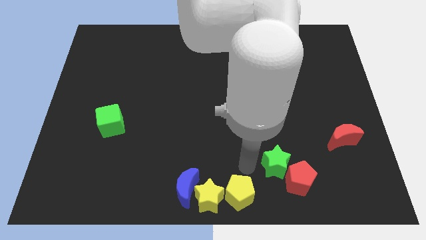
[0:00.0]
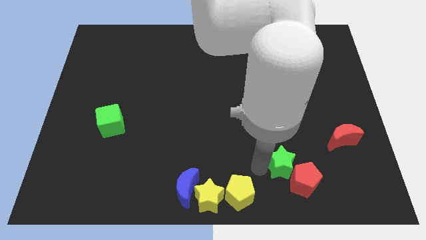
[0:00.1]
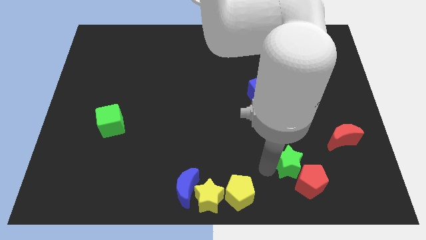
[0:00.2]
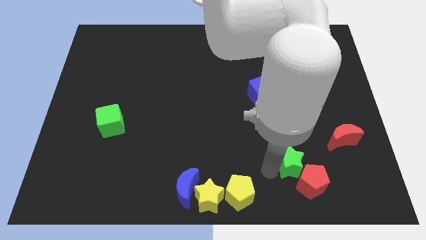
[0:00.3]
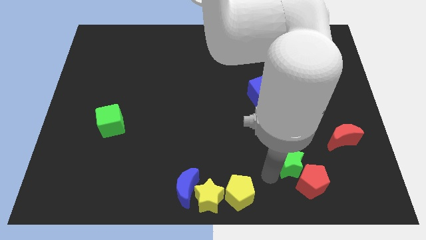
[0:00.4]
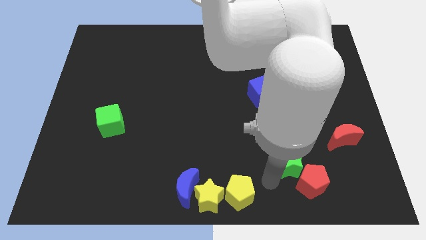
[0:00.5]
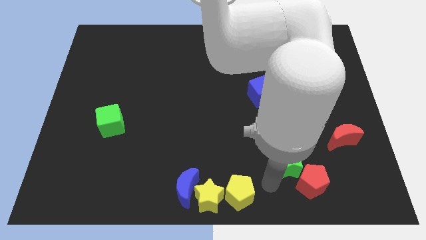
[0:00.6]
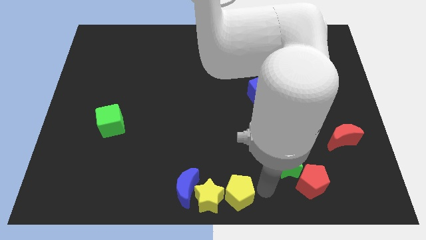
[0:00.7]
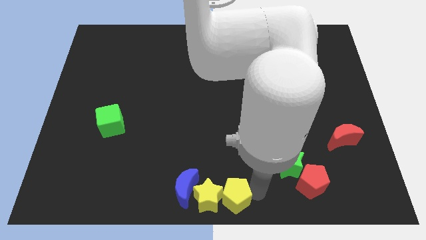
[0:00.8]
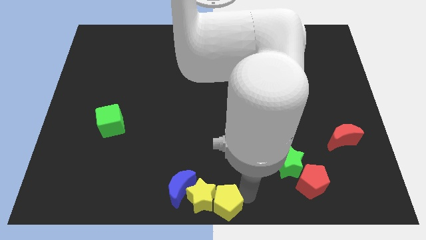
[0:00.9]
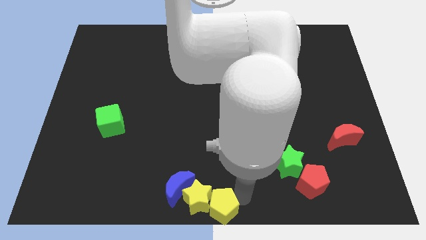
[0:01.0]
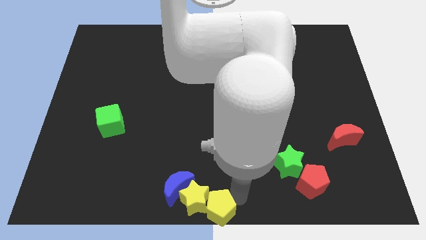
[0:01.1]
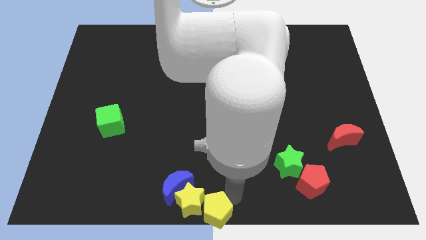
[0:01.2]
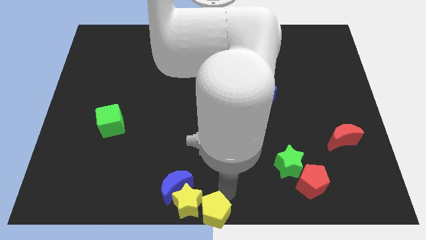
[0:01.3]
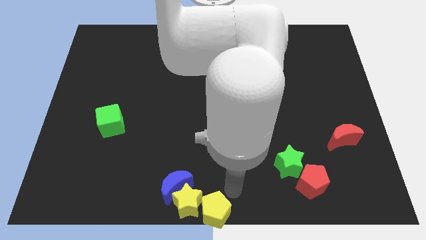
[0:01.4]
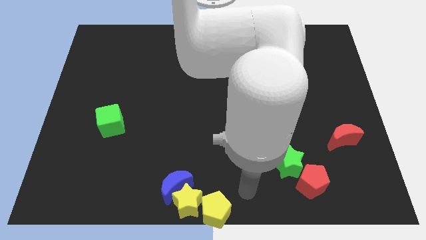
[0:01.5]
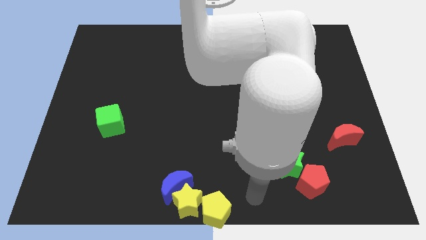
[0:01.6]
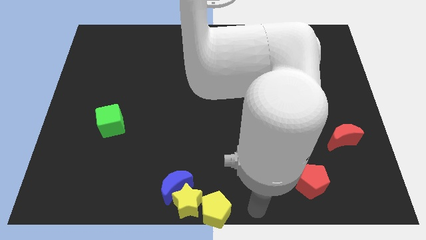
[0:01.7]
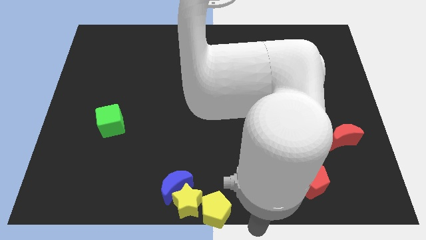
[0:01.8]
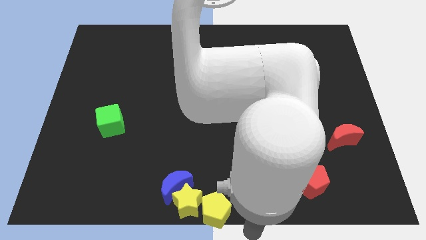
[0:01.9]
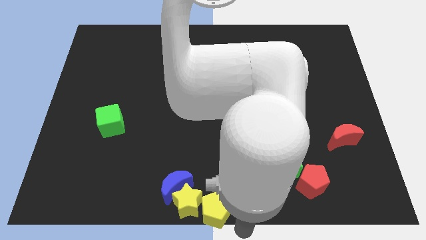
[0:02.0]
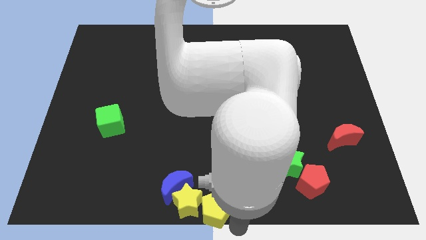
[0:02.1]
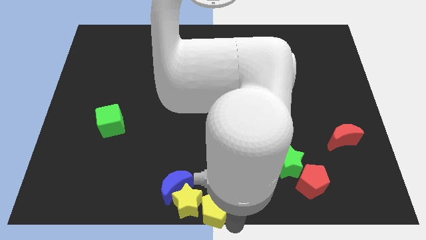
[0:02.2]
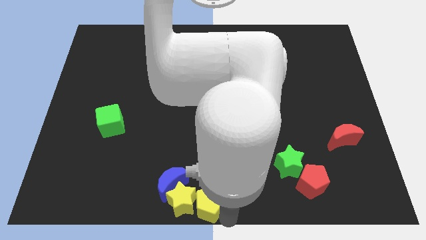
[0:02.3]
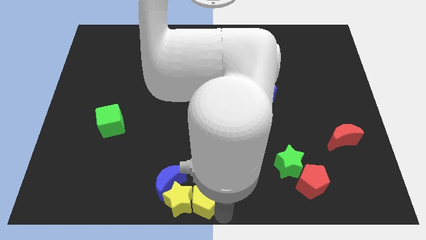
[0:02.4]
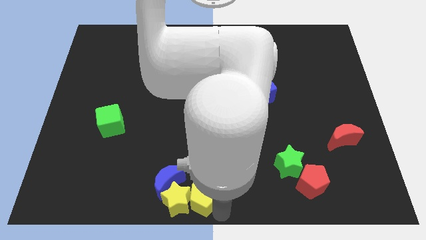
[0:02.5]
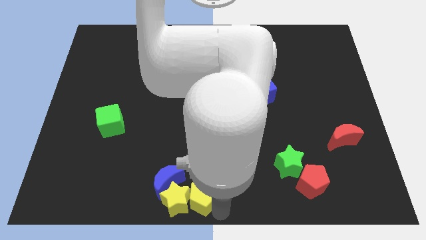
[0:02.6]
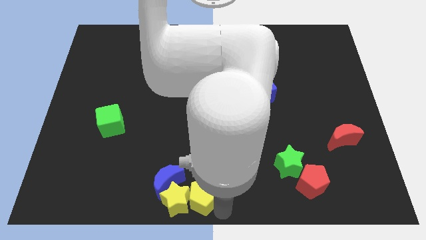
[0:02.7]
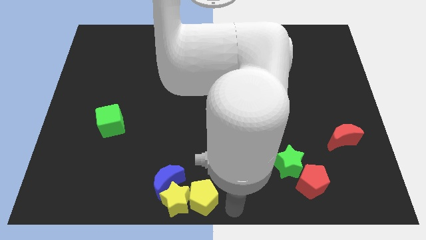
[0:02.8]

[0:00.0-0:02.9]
push the yellow pentagon to the bottom center of the board

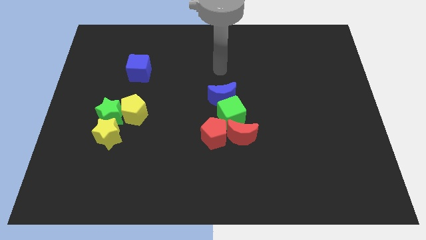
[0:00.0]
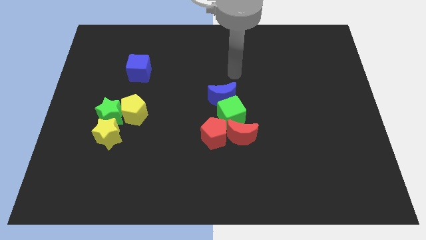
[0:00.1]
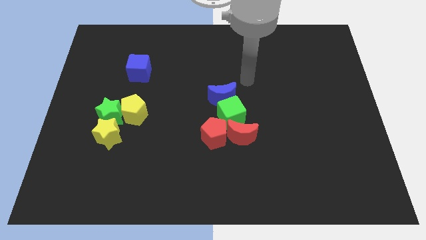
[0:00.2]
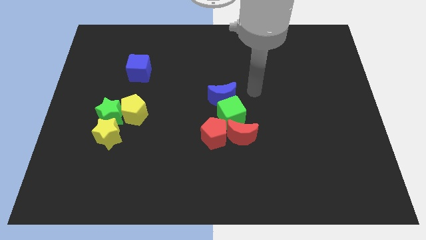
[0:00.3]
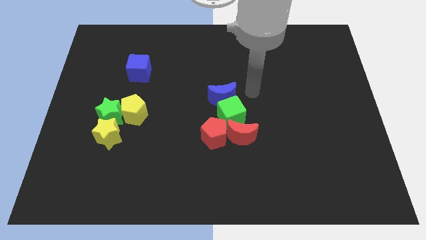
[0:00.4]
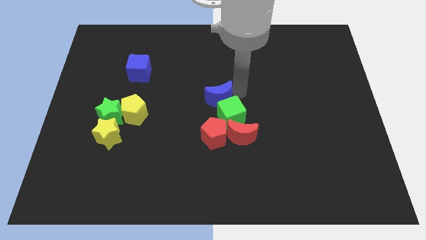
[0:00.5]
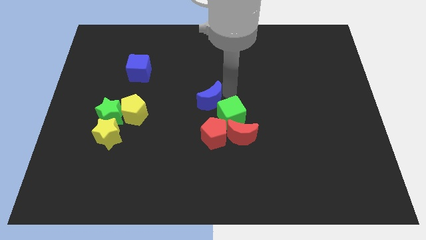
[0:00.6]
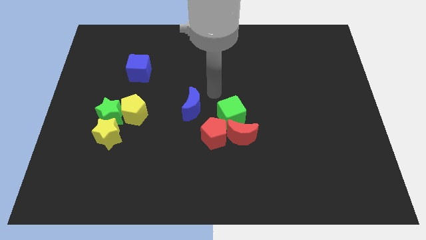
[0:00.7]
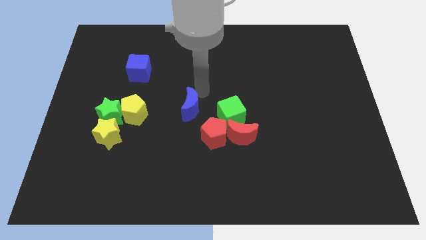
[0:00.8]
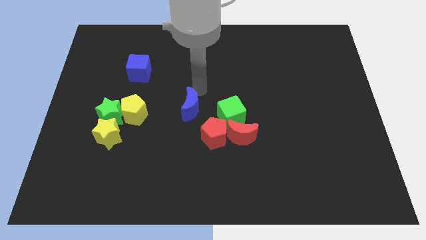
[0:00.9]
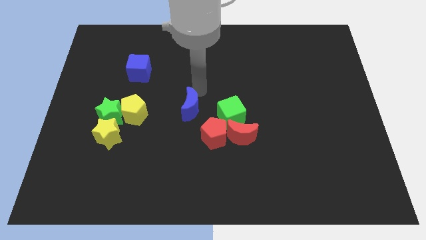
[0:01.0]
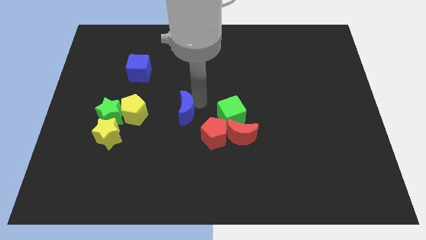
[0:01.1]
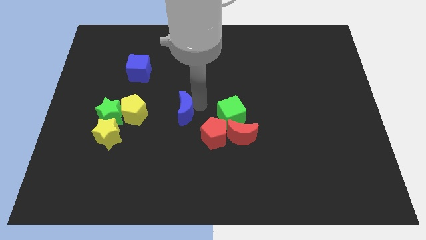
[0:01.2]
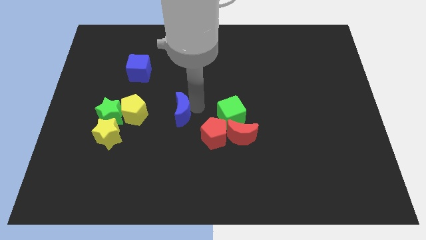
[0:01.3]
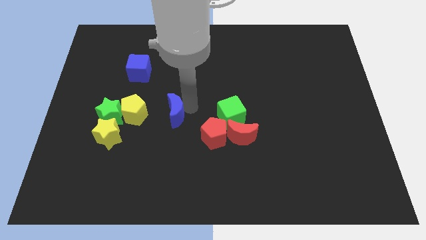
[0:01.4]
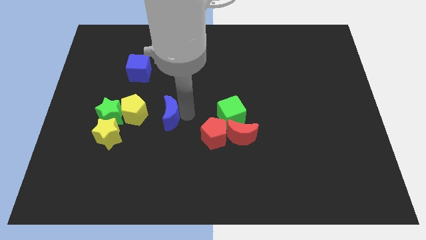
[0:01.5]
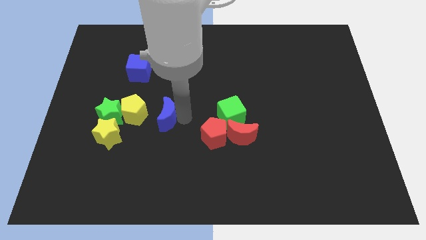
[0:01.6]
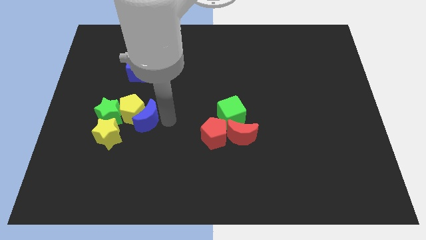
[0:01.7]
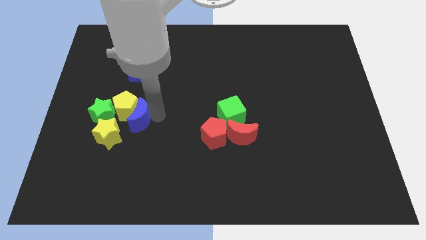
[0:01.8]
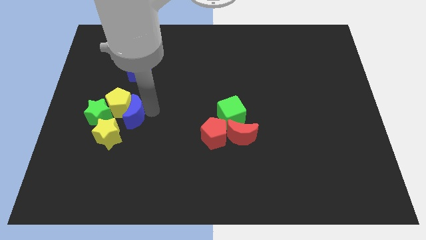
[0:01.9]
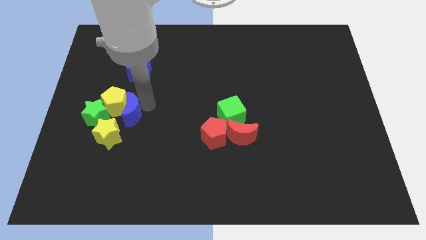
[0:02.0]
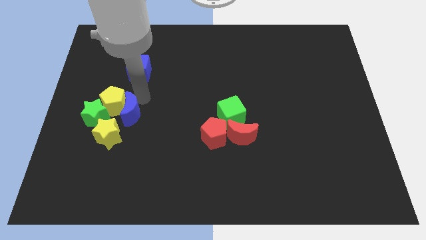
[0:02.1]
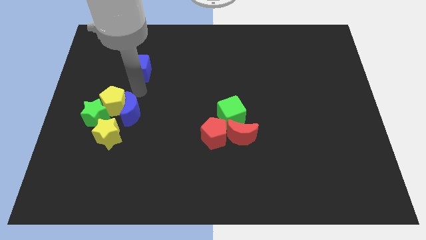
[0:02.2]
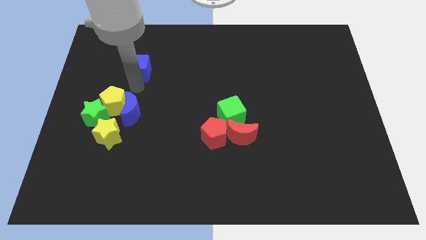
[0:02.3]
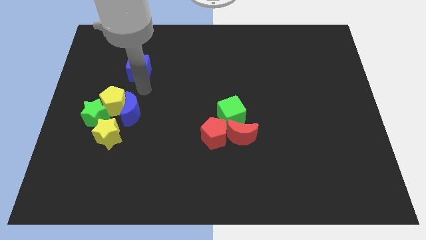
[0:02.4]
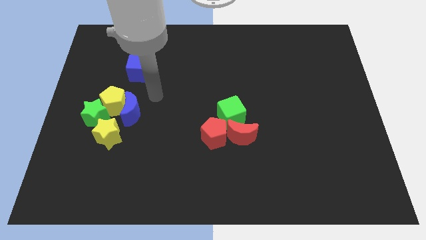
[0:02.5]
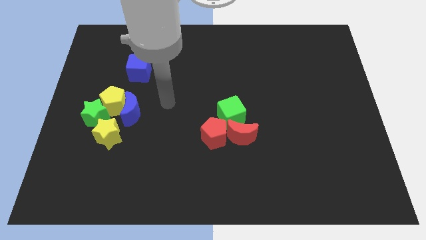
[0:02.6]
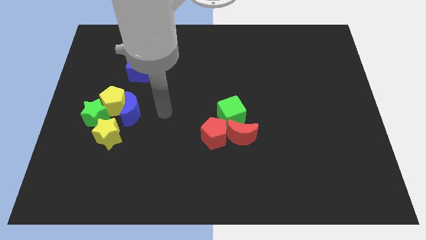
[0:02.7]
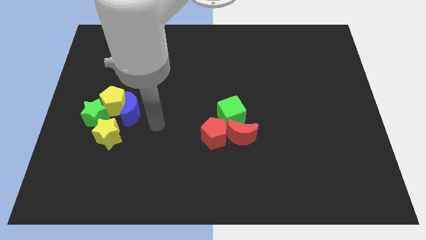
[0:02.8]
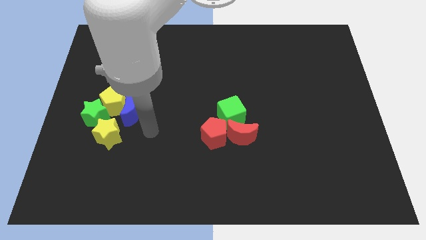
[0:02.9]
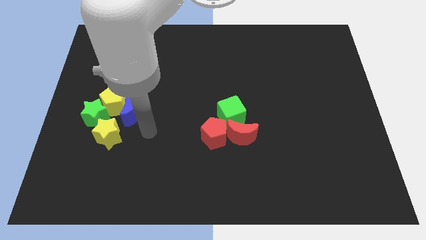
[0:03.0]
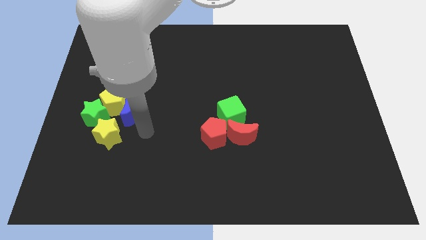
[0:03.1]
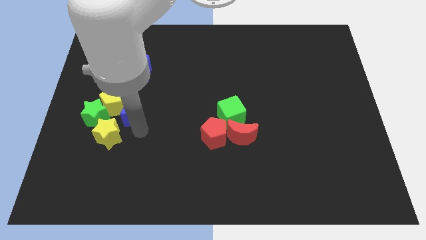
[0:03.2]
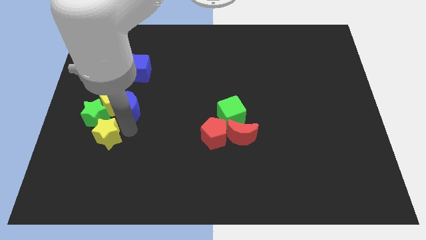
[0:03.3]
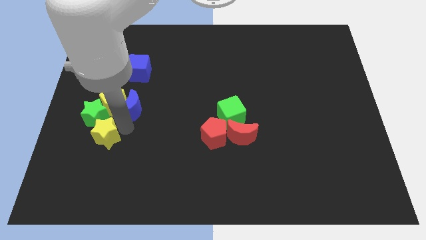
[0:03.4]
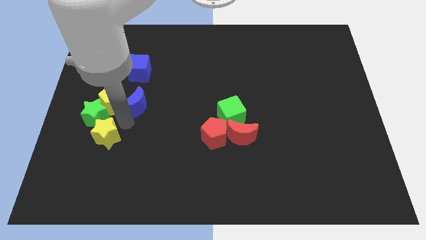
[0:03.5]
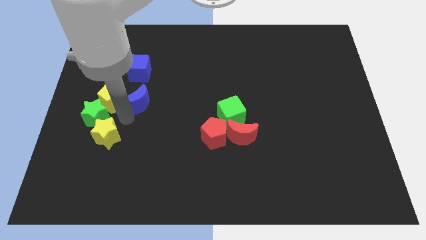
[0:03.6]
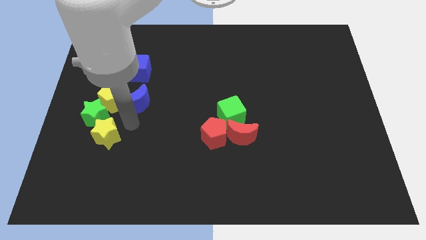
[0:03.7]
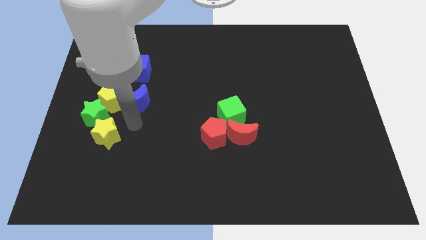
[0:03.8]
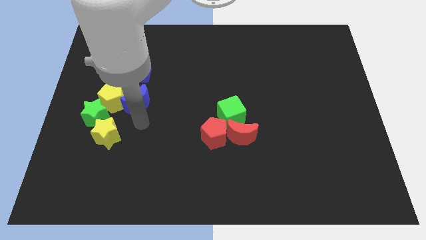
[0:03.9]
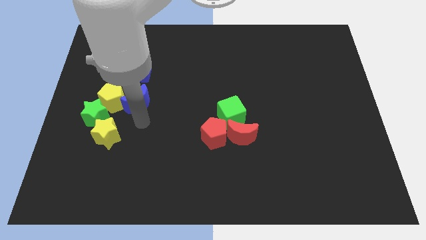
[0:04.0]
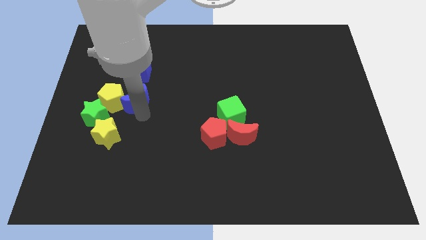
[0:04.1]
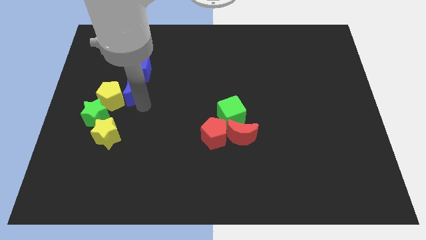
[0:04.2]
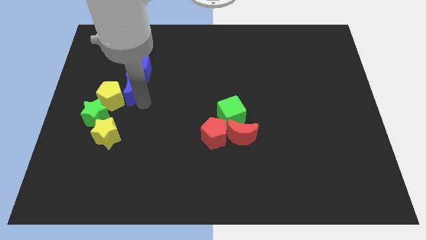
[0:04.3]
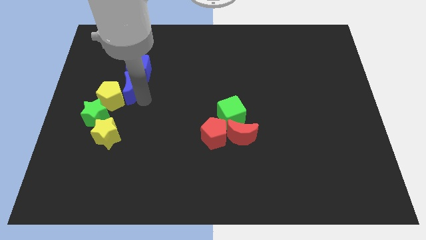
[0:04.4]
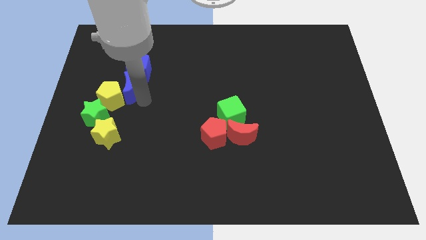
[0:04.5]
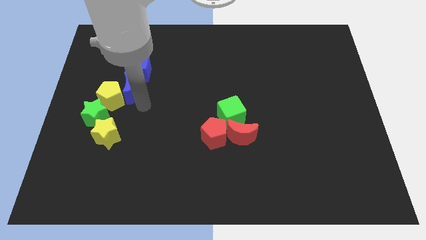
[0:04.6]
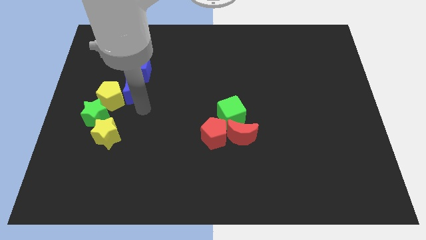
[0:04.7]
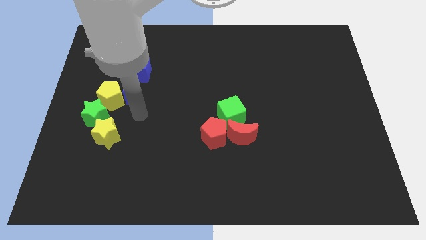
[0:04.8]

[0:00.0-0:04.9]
place the blue crescent below the blue cube

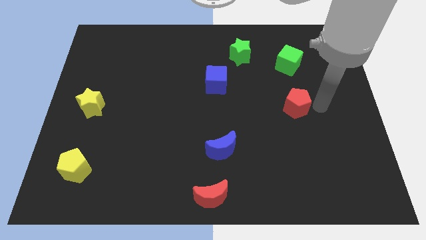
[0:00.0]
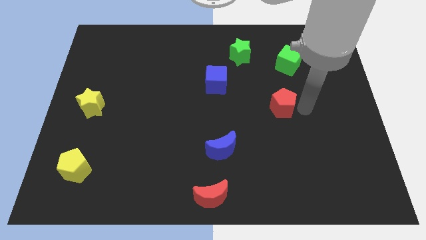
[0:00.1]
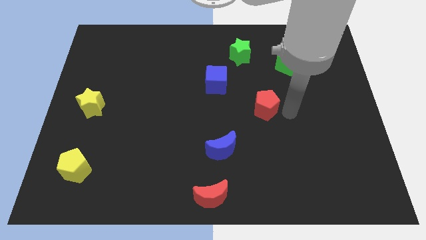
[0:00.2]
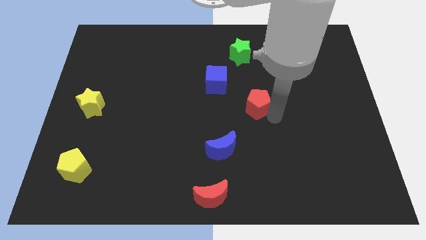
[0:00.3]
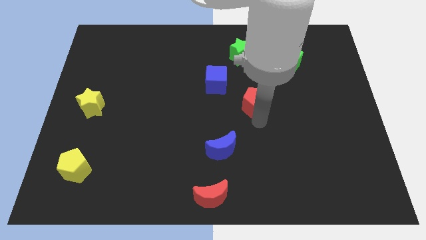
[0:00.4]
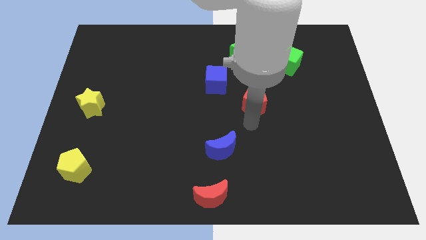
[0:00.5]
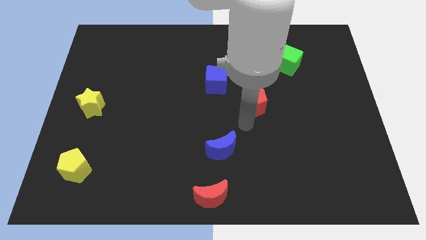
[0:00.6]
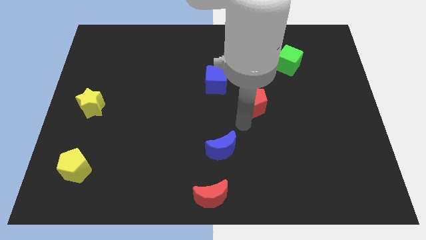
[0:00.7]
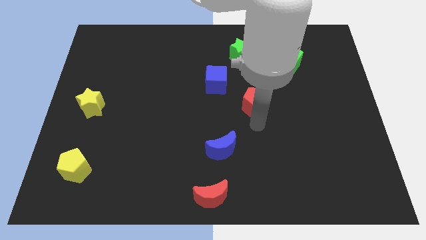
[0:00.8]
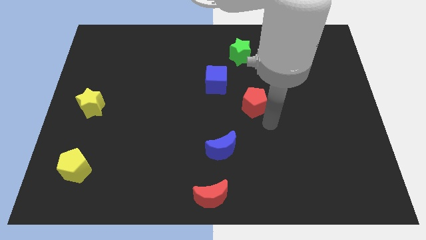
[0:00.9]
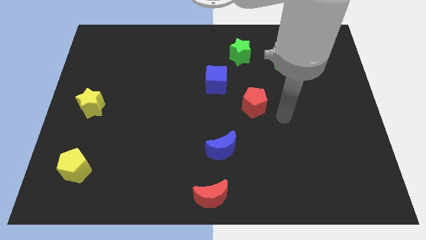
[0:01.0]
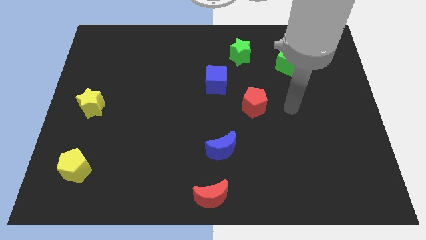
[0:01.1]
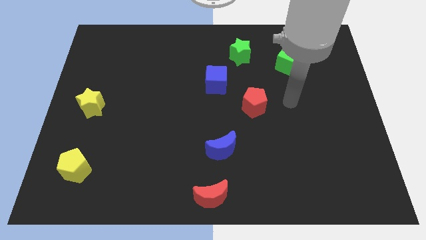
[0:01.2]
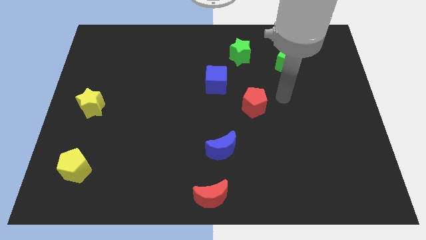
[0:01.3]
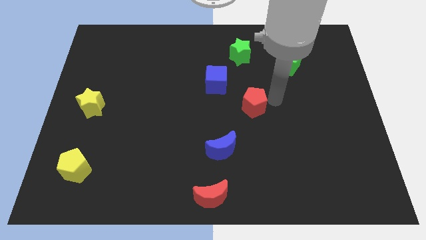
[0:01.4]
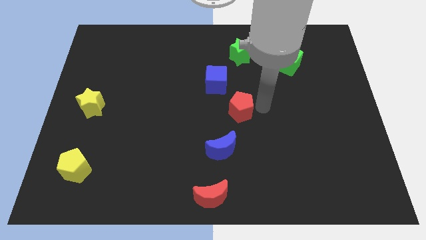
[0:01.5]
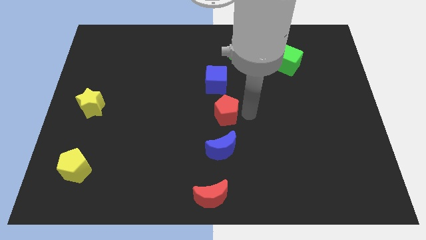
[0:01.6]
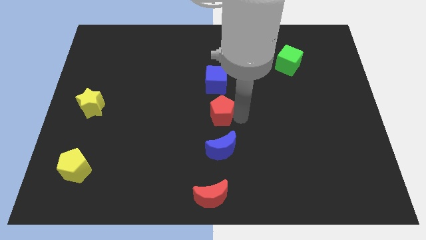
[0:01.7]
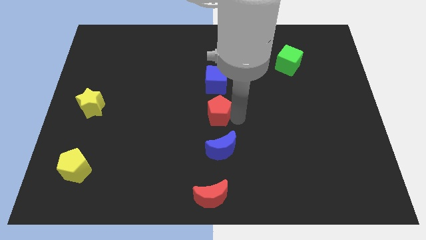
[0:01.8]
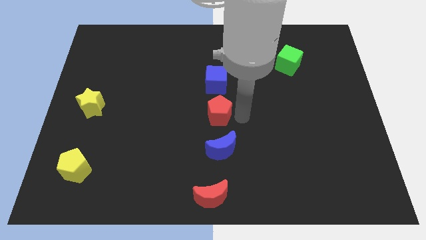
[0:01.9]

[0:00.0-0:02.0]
push the red pentagon towards the bottom of blue cube
